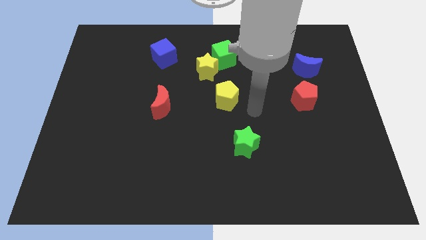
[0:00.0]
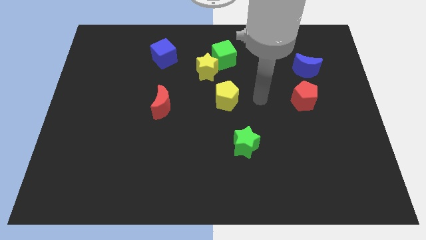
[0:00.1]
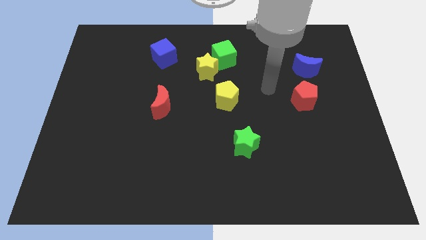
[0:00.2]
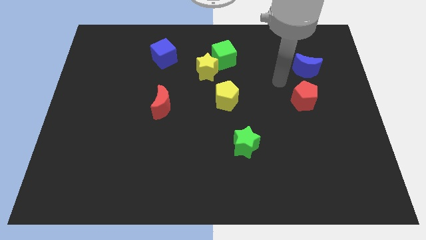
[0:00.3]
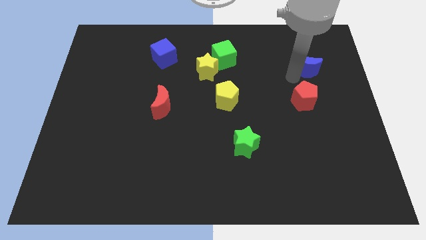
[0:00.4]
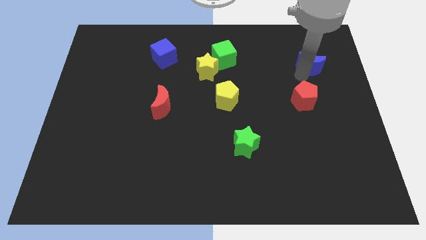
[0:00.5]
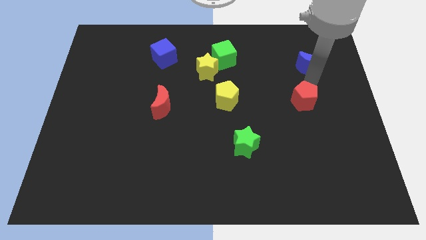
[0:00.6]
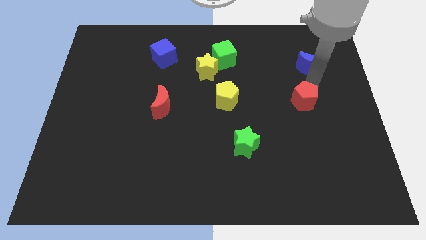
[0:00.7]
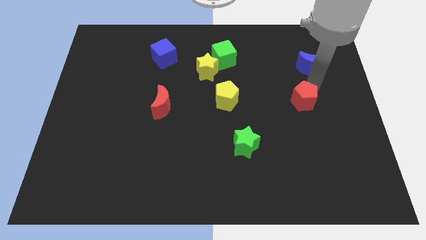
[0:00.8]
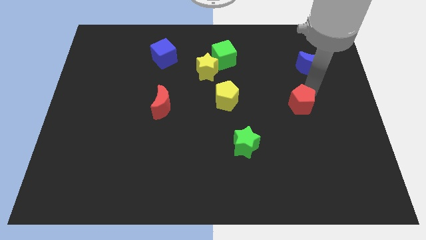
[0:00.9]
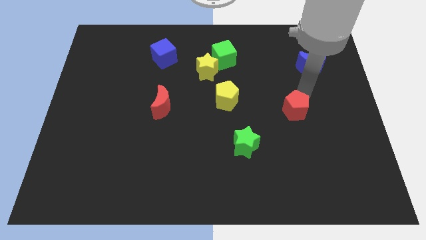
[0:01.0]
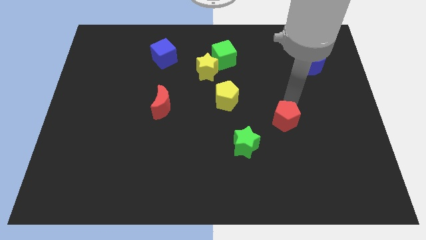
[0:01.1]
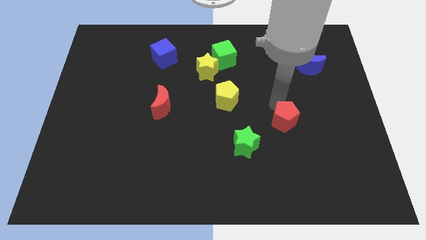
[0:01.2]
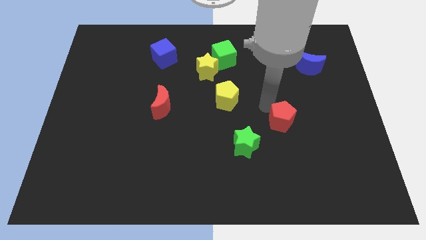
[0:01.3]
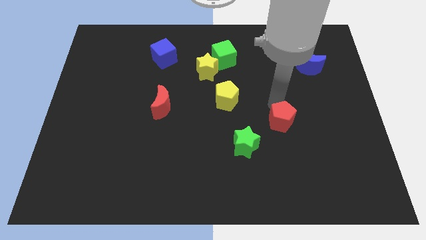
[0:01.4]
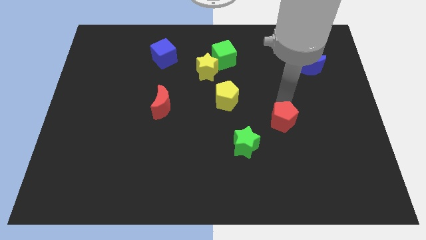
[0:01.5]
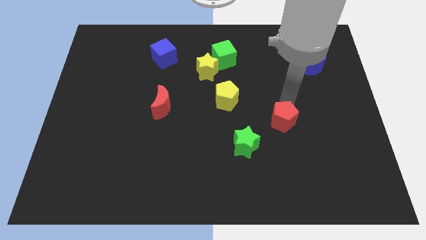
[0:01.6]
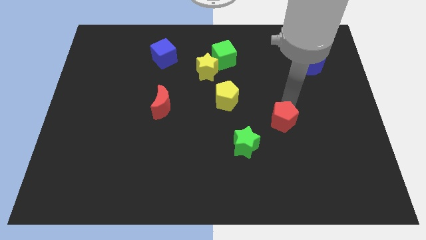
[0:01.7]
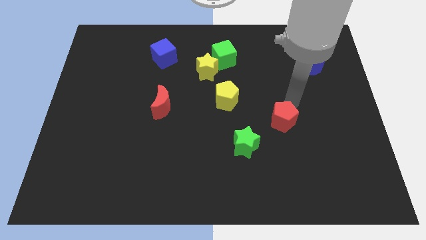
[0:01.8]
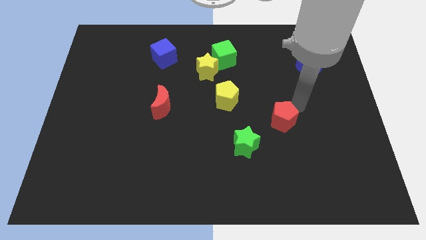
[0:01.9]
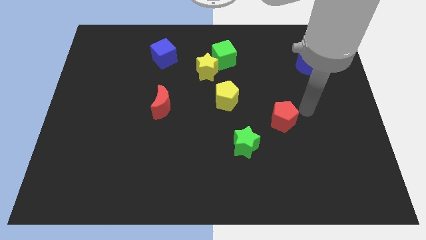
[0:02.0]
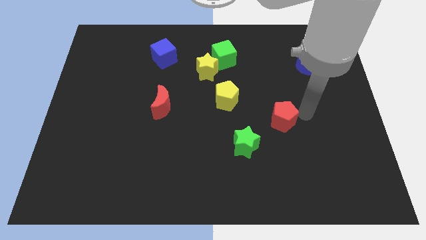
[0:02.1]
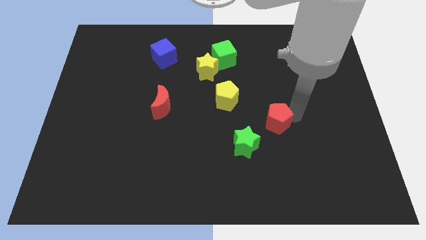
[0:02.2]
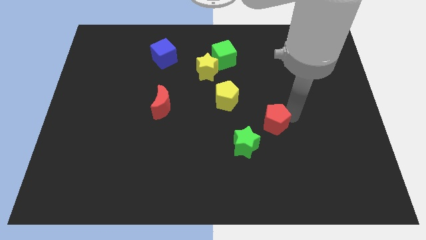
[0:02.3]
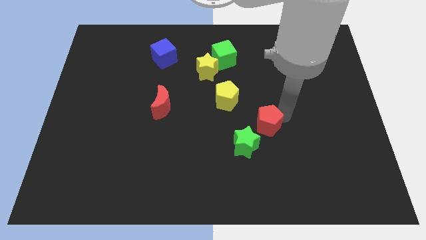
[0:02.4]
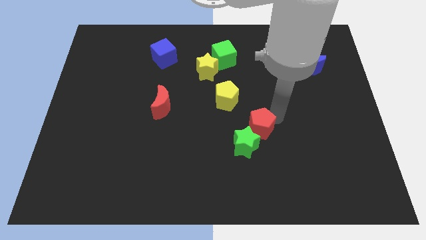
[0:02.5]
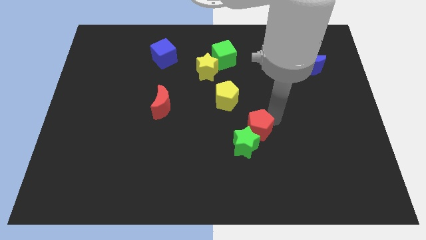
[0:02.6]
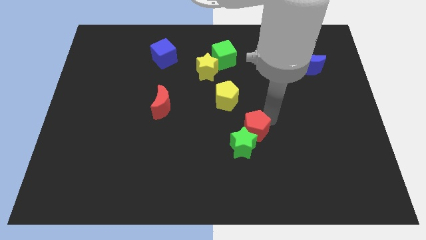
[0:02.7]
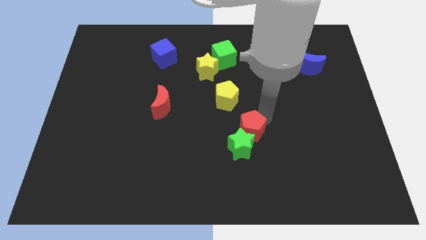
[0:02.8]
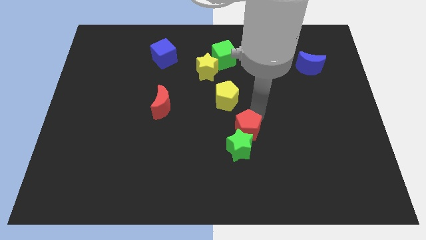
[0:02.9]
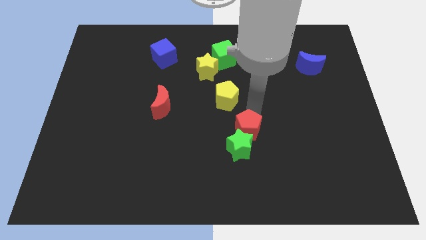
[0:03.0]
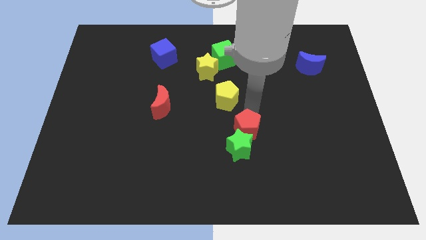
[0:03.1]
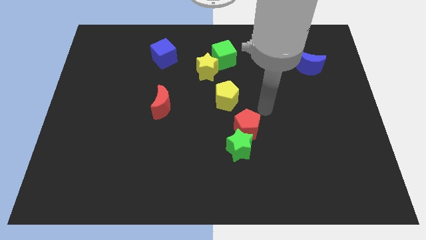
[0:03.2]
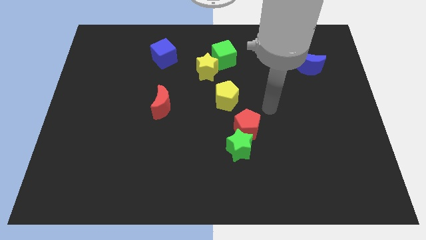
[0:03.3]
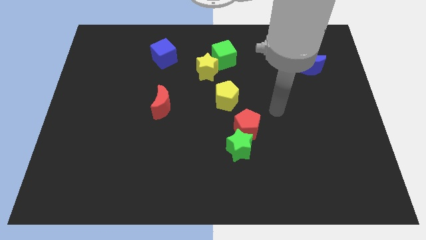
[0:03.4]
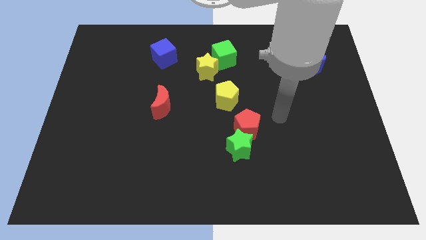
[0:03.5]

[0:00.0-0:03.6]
push the red pentagon into the green star

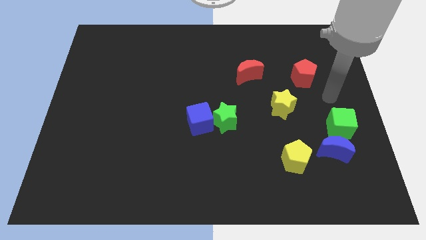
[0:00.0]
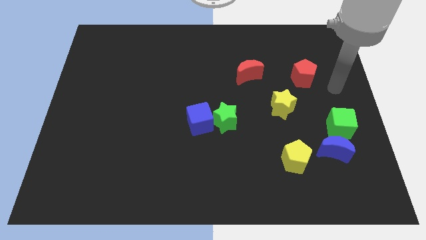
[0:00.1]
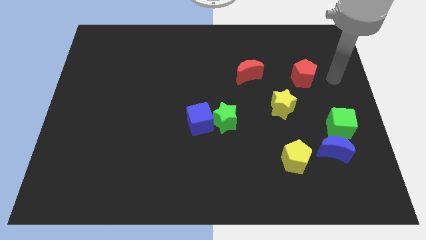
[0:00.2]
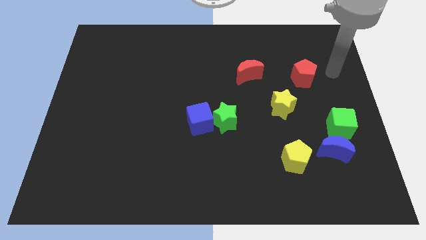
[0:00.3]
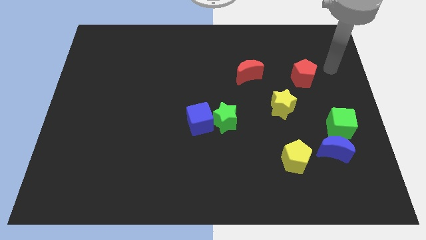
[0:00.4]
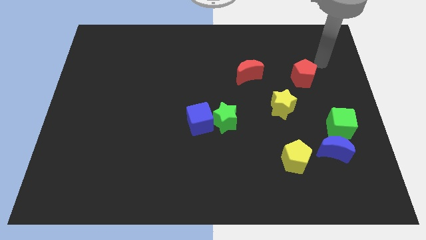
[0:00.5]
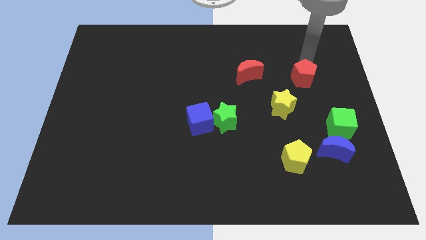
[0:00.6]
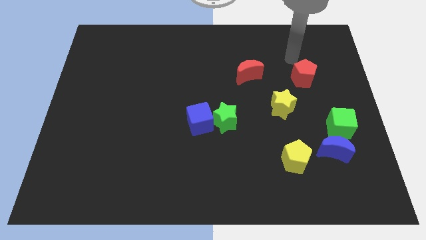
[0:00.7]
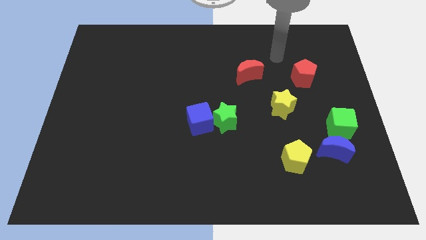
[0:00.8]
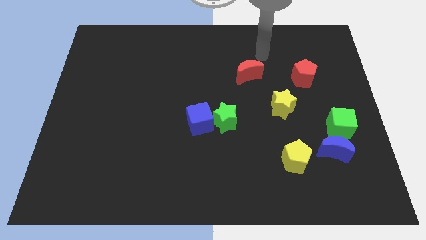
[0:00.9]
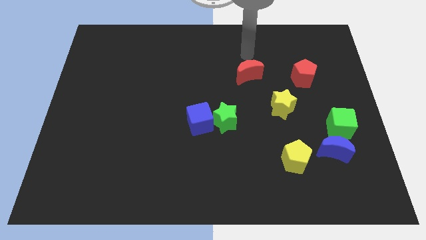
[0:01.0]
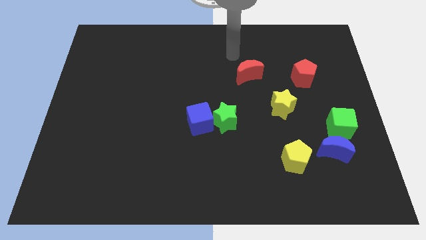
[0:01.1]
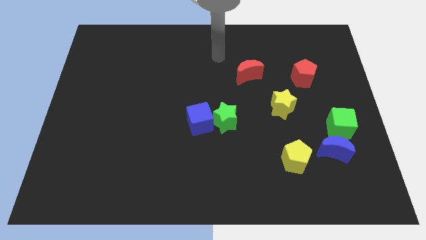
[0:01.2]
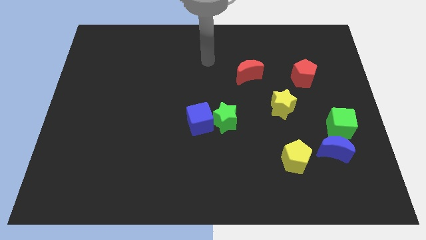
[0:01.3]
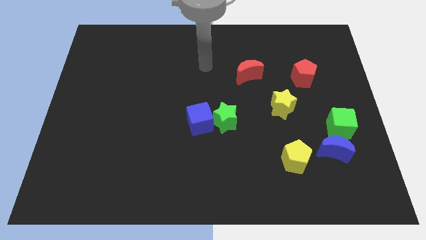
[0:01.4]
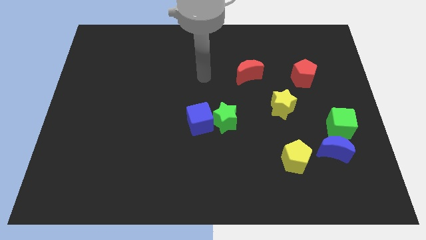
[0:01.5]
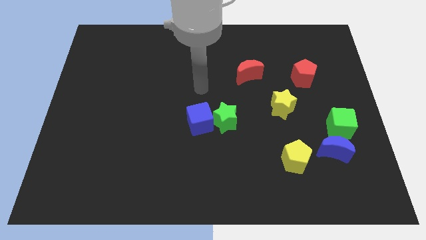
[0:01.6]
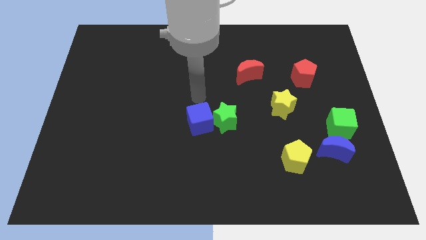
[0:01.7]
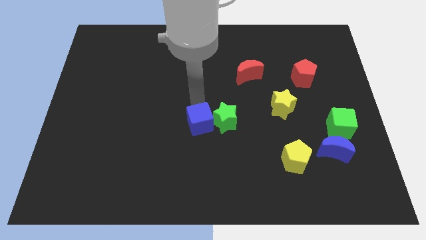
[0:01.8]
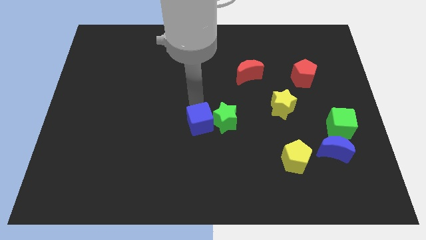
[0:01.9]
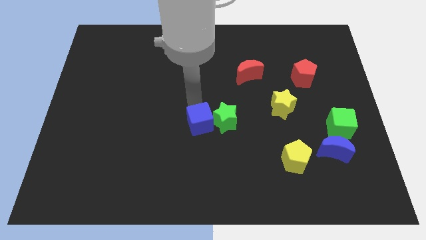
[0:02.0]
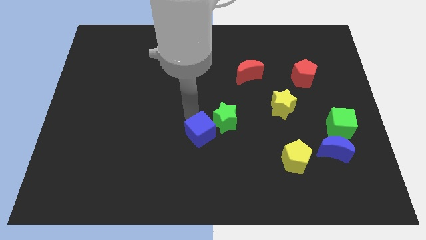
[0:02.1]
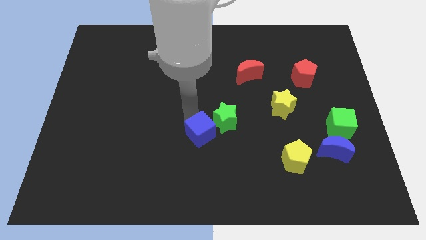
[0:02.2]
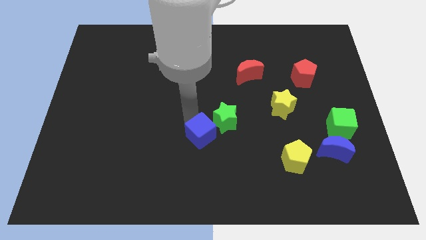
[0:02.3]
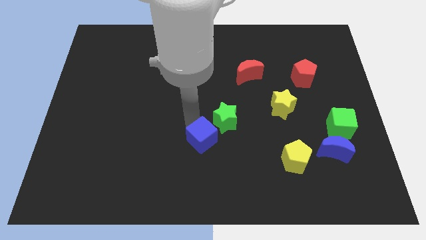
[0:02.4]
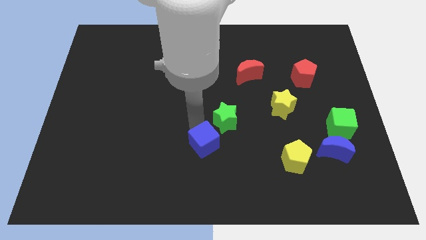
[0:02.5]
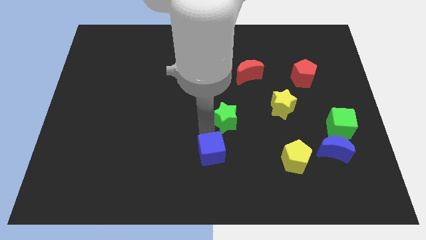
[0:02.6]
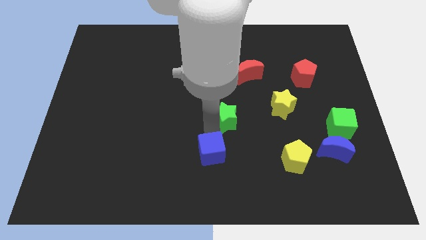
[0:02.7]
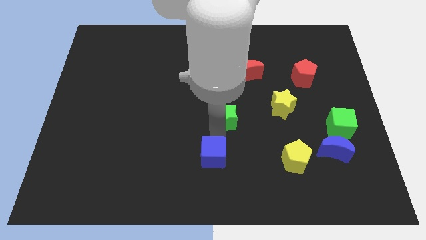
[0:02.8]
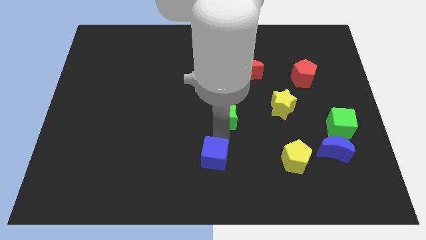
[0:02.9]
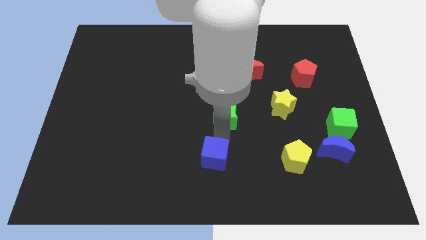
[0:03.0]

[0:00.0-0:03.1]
push the blue cube to the bottom left side of the green star

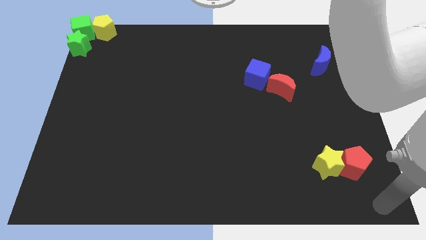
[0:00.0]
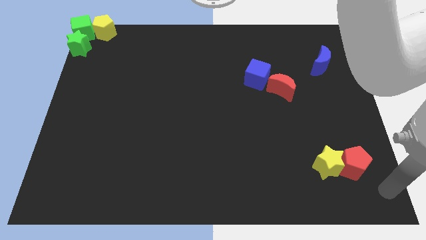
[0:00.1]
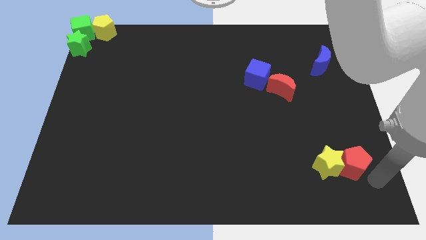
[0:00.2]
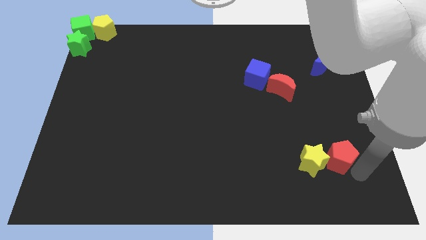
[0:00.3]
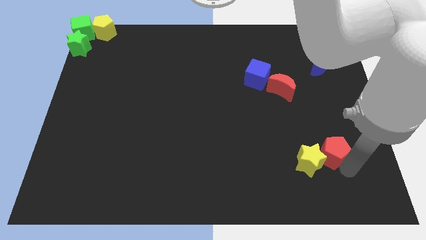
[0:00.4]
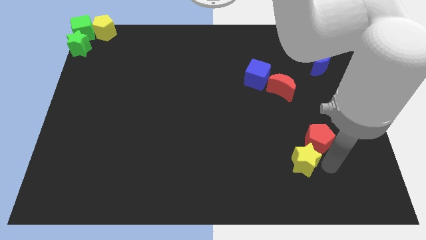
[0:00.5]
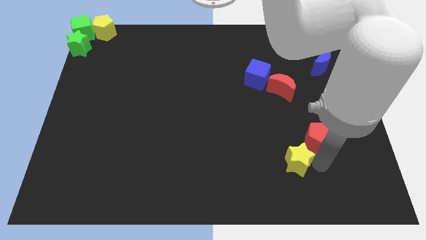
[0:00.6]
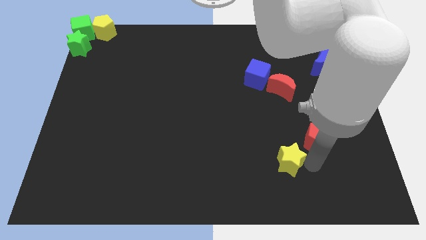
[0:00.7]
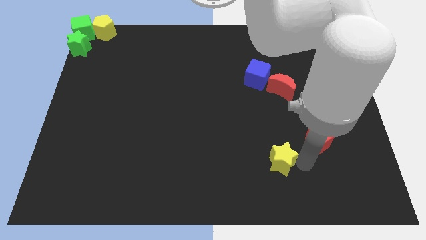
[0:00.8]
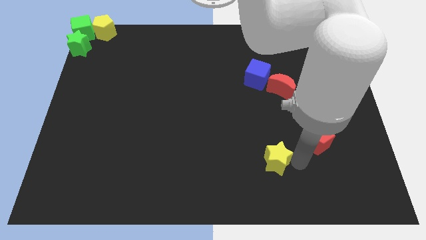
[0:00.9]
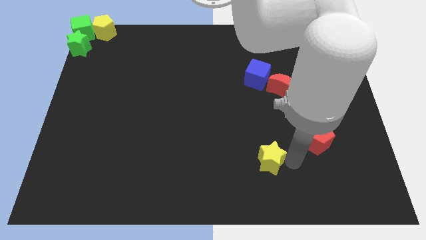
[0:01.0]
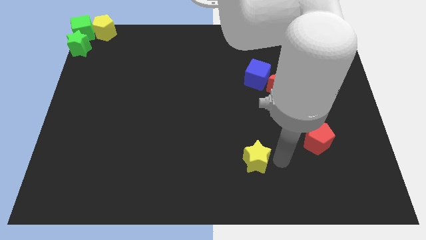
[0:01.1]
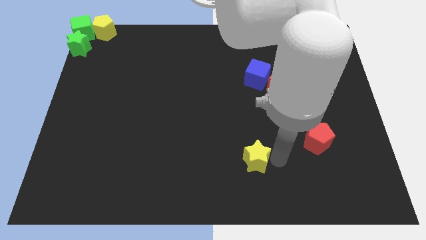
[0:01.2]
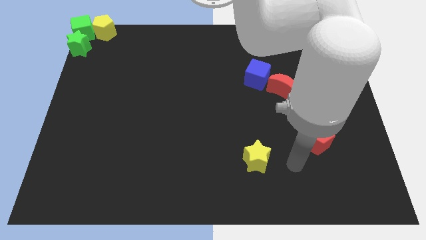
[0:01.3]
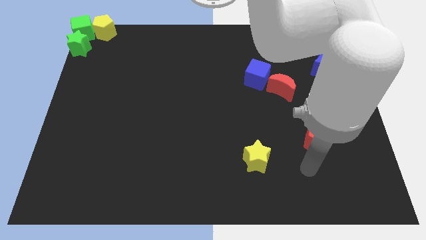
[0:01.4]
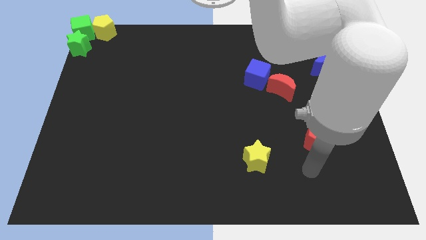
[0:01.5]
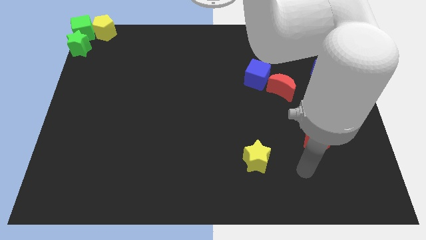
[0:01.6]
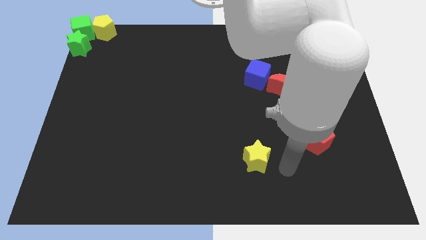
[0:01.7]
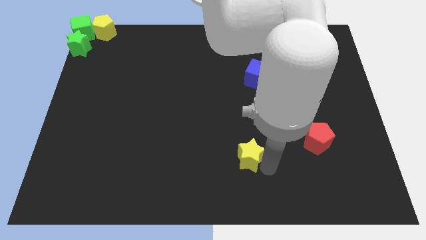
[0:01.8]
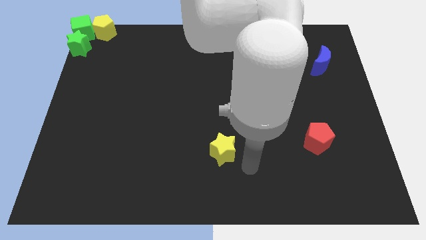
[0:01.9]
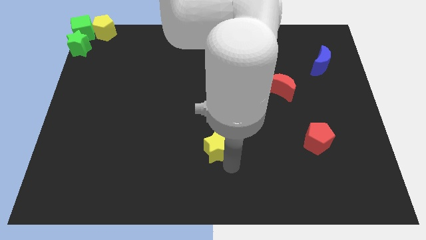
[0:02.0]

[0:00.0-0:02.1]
separate the yellow star and red pentagon

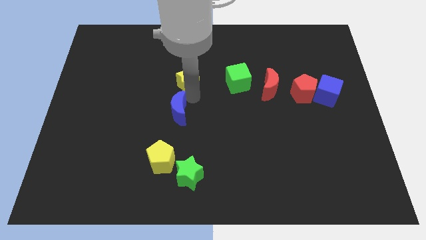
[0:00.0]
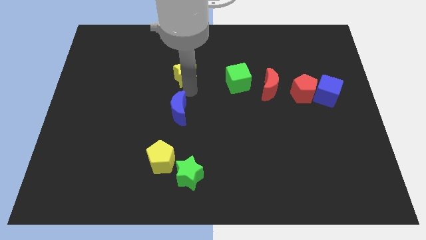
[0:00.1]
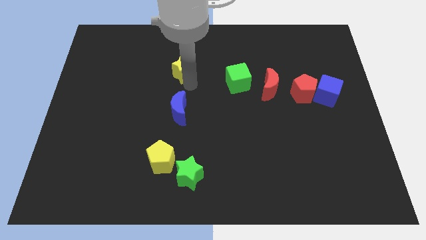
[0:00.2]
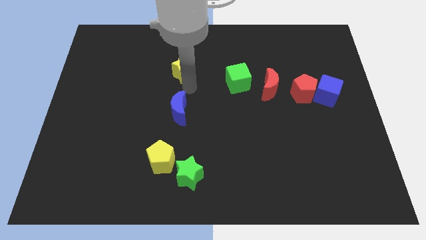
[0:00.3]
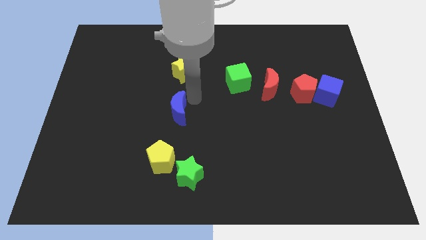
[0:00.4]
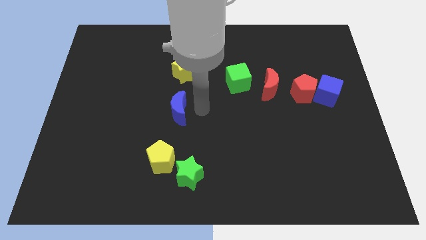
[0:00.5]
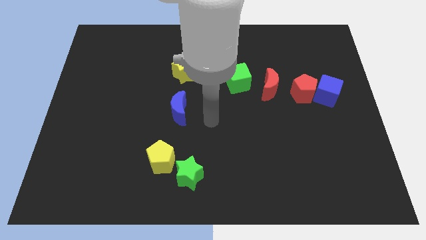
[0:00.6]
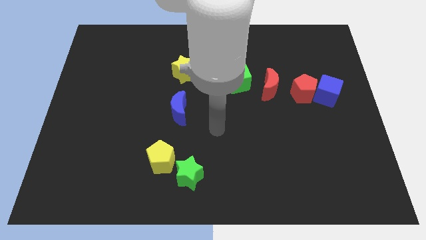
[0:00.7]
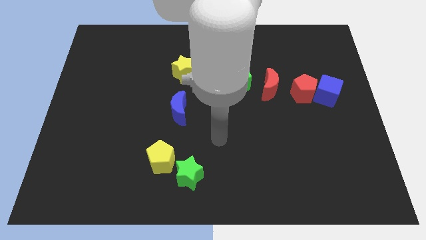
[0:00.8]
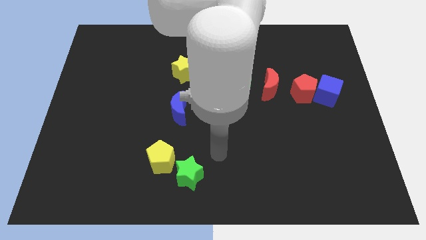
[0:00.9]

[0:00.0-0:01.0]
slightly move the yellow star towards top
